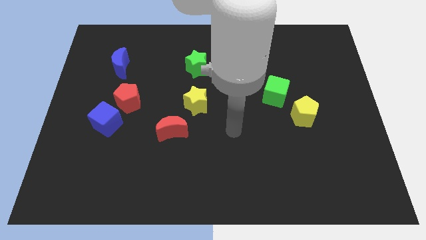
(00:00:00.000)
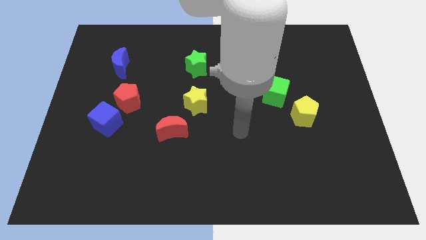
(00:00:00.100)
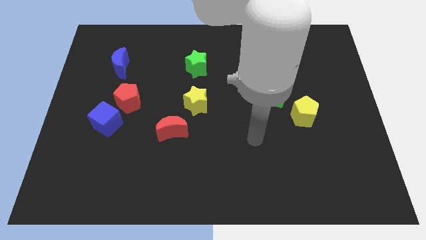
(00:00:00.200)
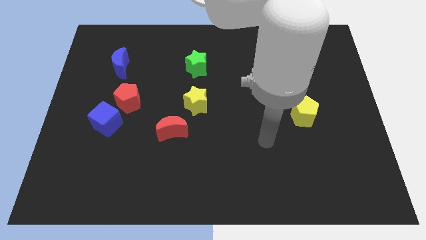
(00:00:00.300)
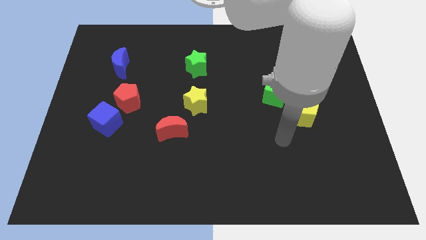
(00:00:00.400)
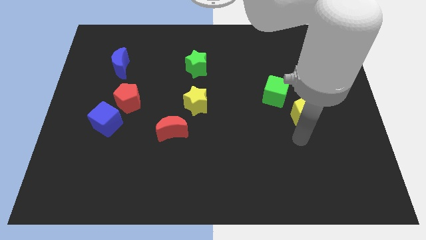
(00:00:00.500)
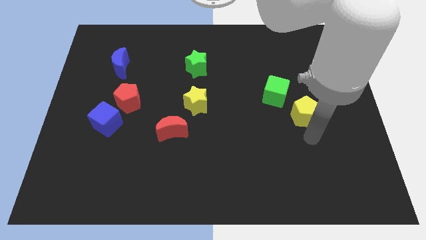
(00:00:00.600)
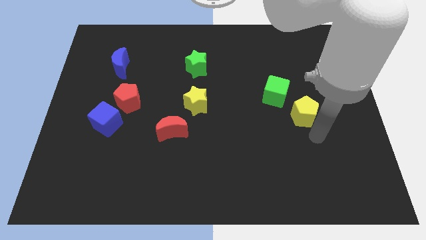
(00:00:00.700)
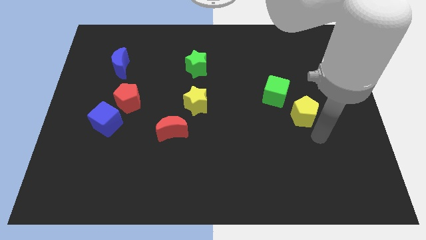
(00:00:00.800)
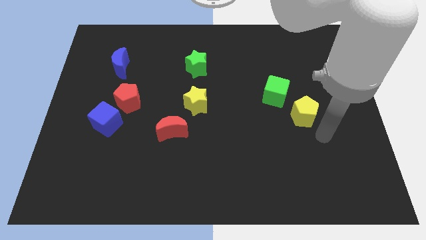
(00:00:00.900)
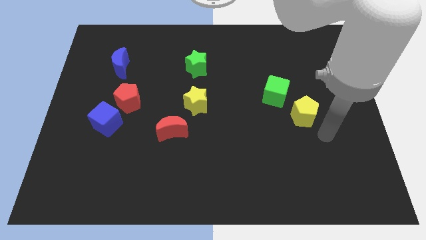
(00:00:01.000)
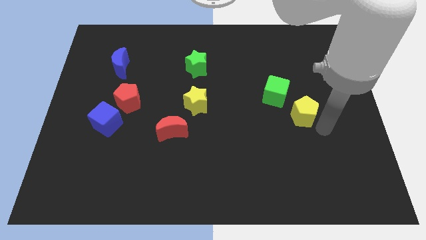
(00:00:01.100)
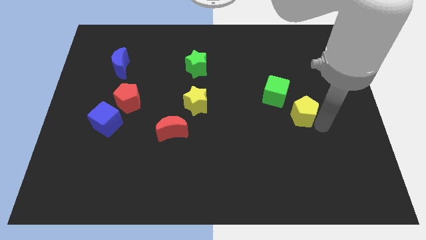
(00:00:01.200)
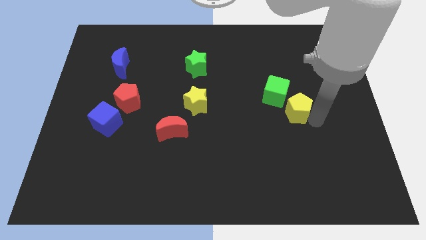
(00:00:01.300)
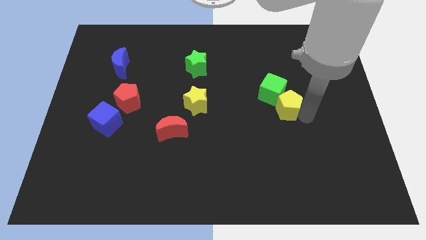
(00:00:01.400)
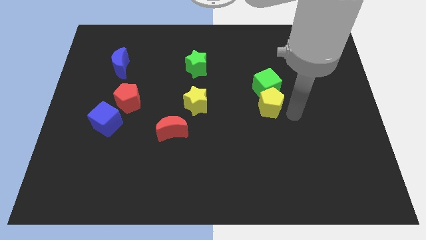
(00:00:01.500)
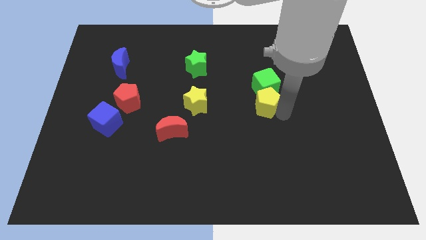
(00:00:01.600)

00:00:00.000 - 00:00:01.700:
push the yellow pentagon into the green cube

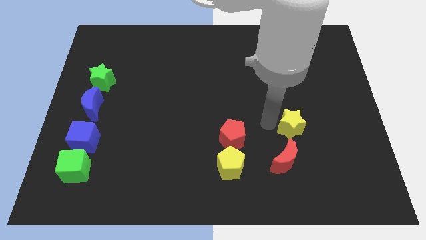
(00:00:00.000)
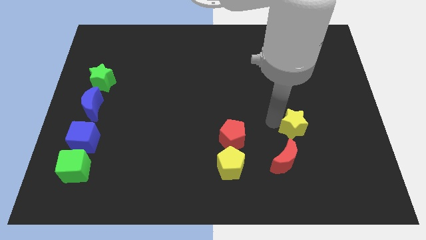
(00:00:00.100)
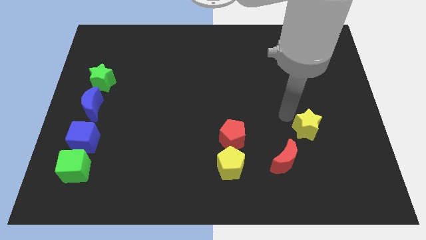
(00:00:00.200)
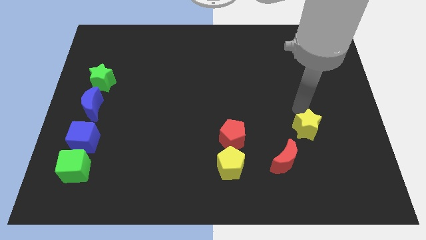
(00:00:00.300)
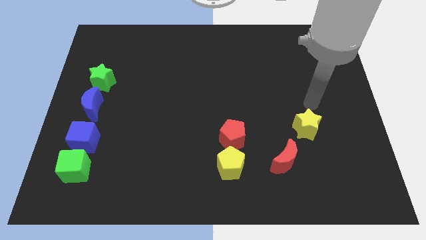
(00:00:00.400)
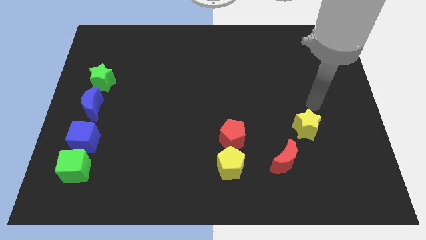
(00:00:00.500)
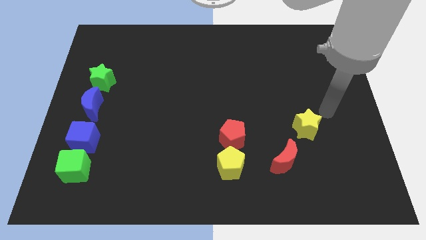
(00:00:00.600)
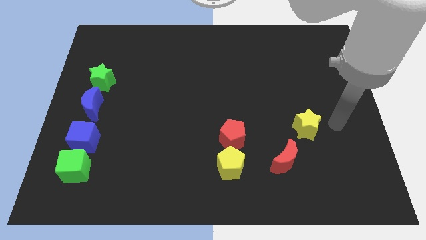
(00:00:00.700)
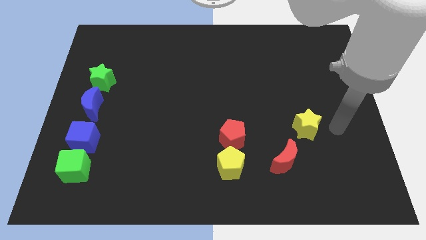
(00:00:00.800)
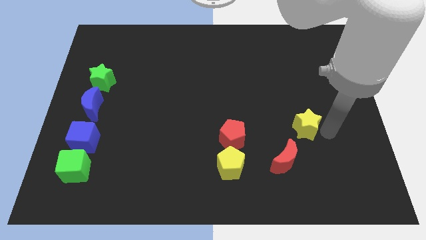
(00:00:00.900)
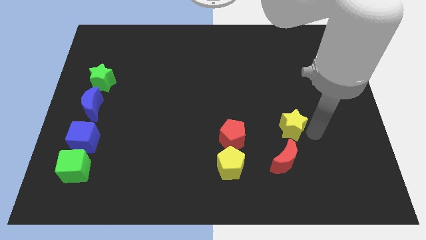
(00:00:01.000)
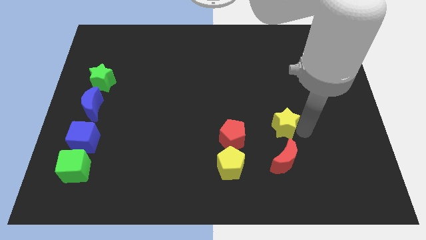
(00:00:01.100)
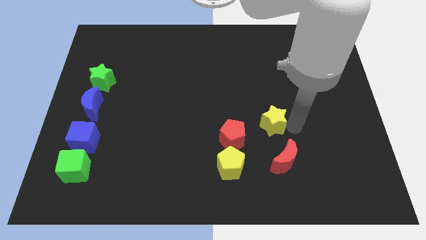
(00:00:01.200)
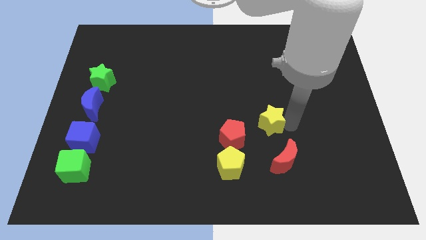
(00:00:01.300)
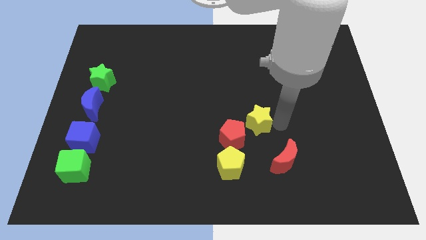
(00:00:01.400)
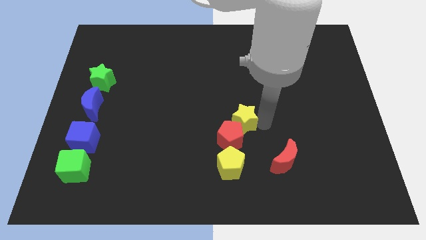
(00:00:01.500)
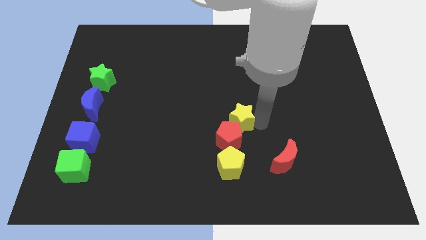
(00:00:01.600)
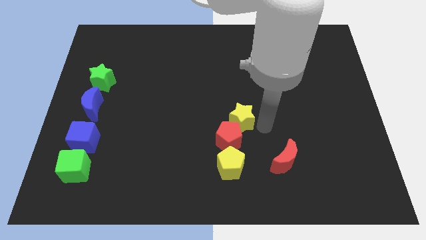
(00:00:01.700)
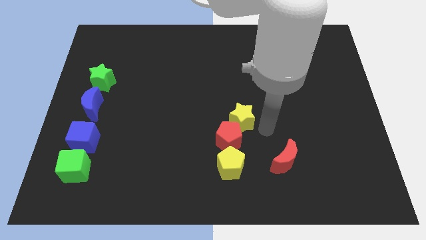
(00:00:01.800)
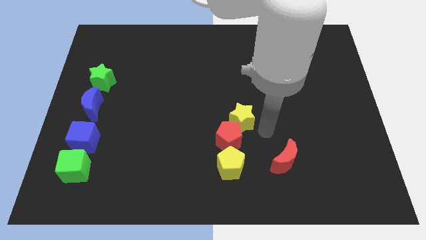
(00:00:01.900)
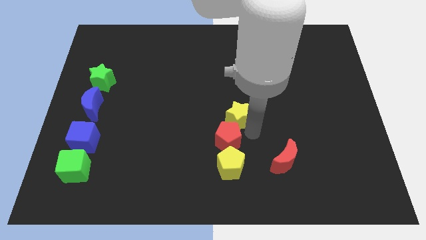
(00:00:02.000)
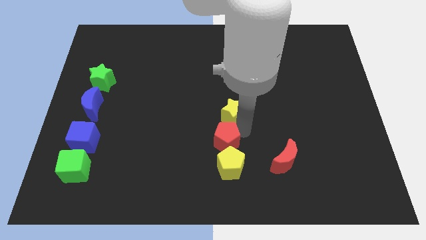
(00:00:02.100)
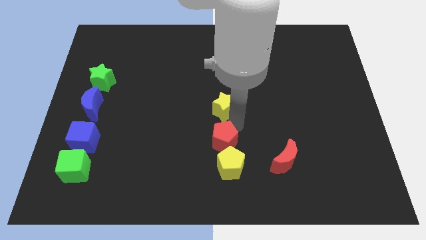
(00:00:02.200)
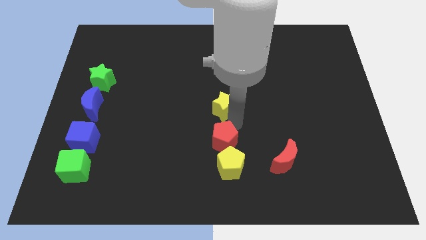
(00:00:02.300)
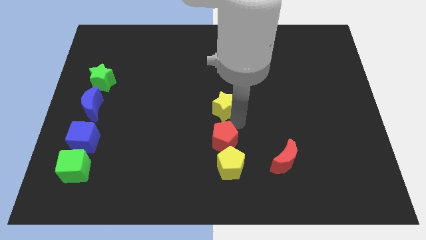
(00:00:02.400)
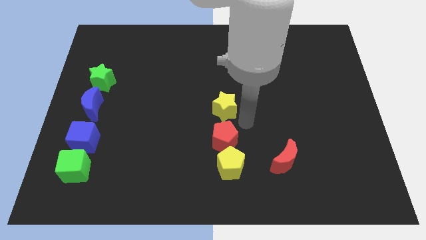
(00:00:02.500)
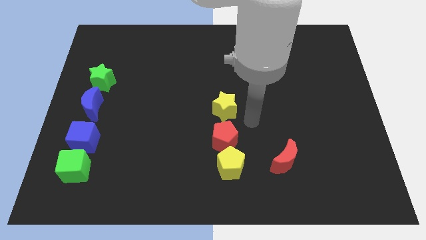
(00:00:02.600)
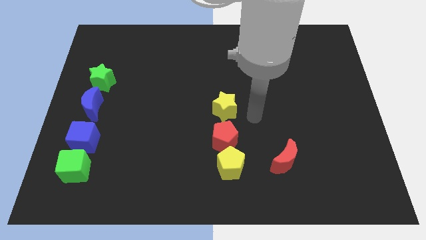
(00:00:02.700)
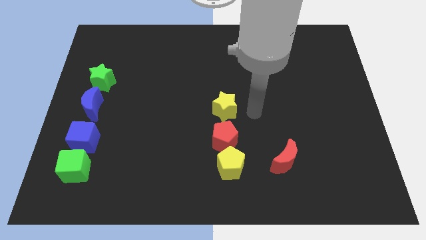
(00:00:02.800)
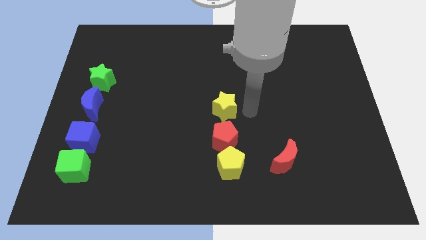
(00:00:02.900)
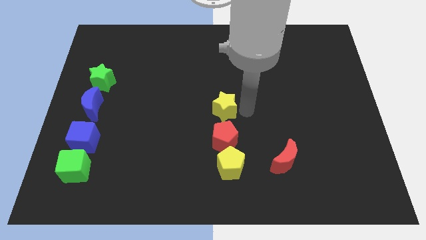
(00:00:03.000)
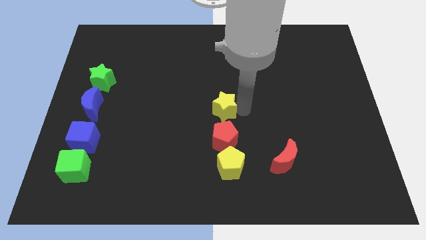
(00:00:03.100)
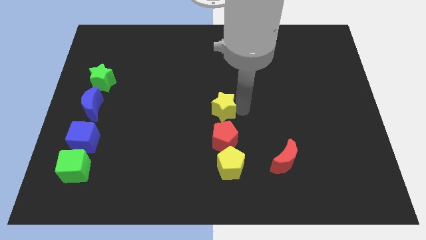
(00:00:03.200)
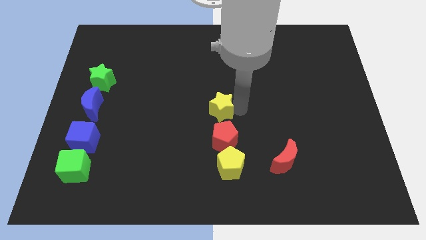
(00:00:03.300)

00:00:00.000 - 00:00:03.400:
push the yellow star vertically above the red pentagon

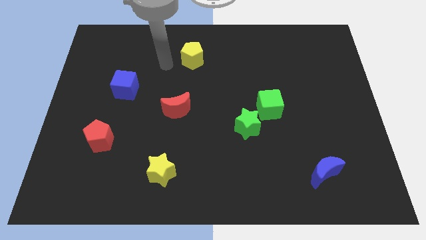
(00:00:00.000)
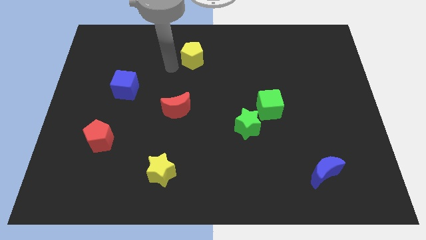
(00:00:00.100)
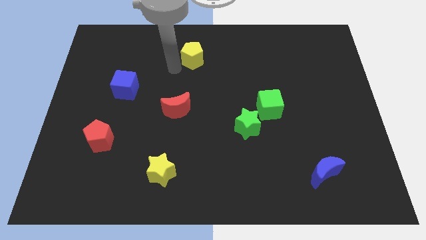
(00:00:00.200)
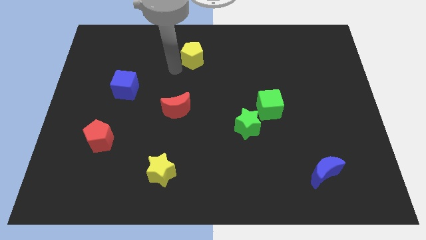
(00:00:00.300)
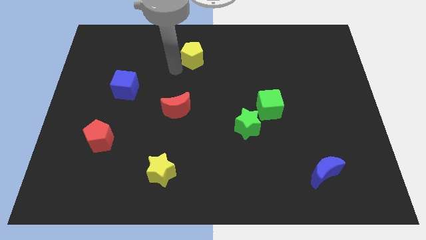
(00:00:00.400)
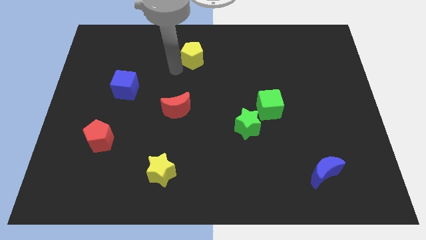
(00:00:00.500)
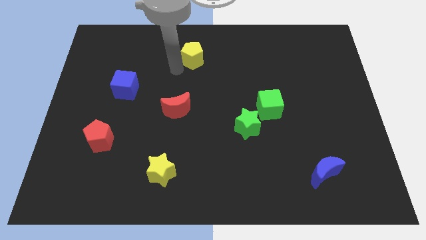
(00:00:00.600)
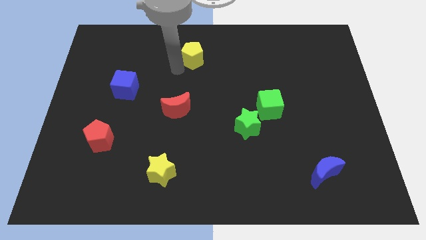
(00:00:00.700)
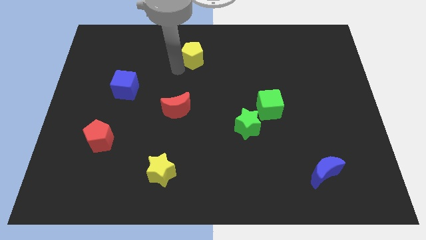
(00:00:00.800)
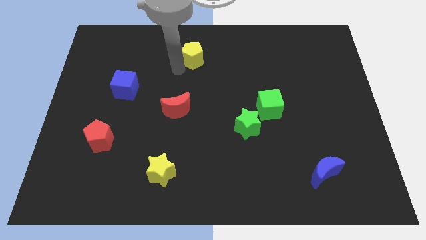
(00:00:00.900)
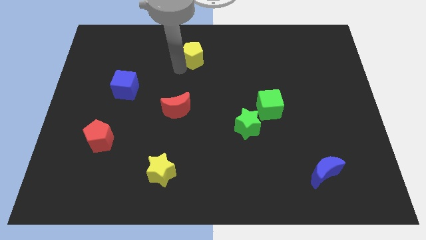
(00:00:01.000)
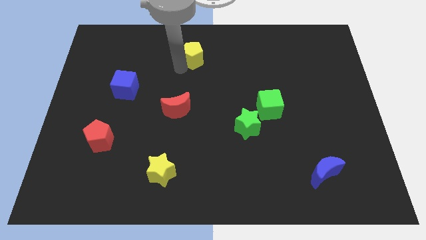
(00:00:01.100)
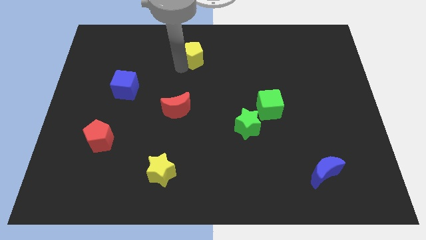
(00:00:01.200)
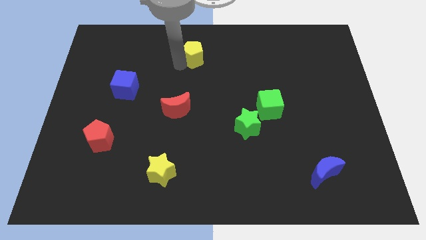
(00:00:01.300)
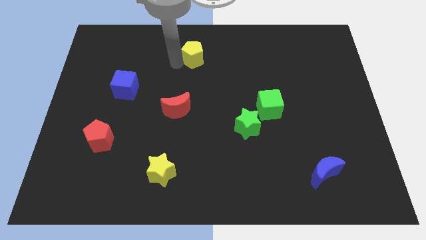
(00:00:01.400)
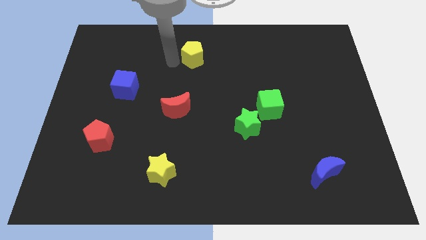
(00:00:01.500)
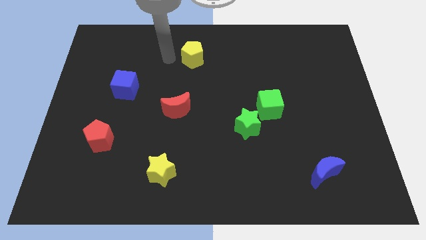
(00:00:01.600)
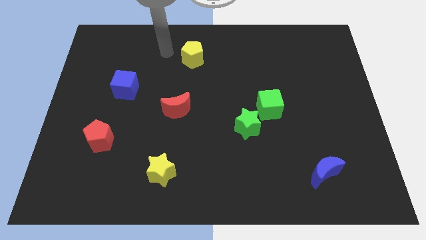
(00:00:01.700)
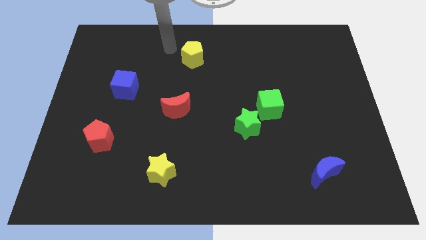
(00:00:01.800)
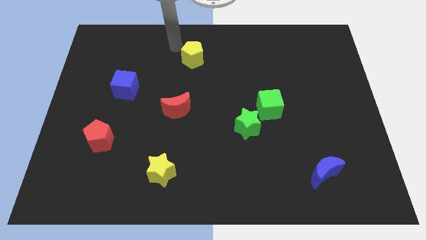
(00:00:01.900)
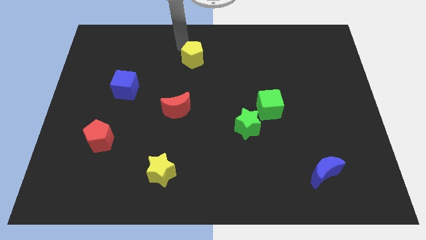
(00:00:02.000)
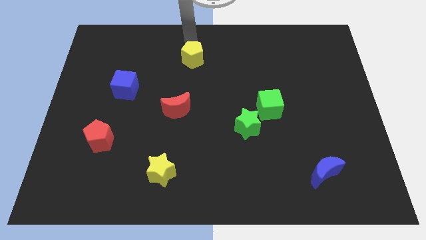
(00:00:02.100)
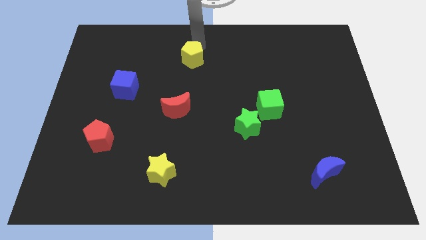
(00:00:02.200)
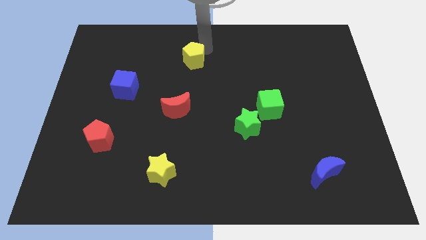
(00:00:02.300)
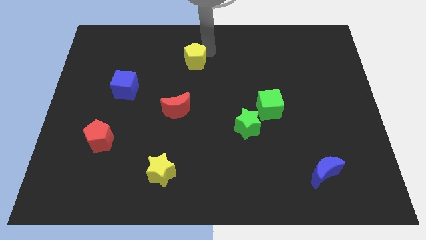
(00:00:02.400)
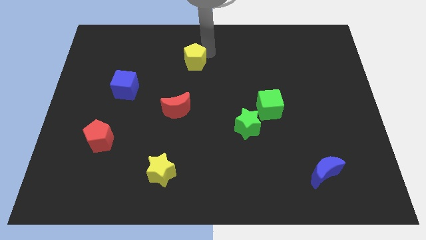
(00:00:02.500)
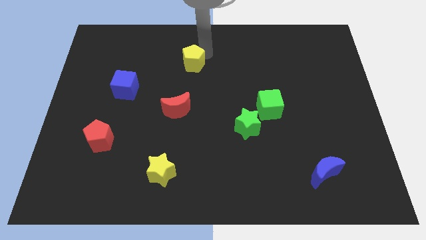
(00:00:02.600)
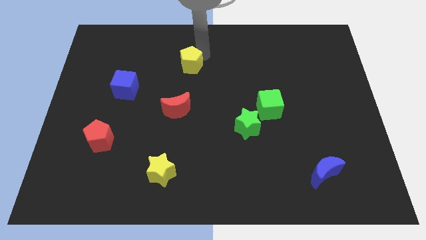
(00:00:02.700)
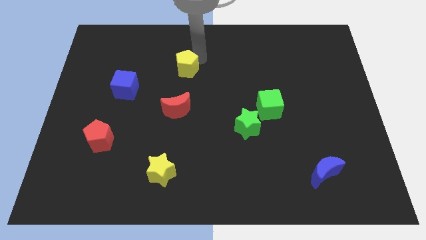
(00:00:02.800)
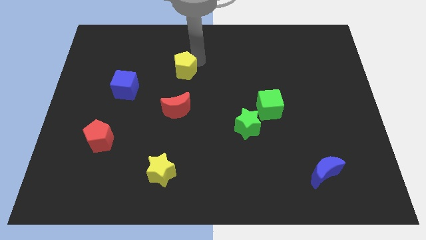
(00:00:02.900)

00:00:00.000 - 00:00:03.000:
push the yellow pentagon above the red moon

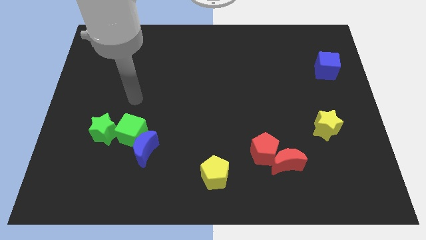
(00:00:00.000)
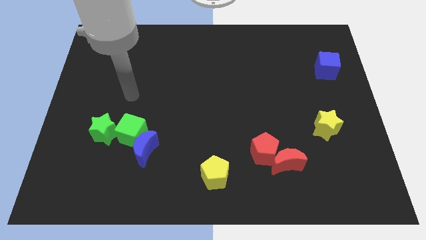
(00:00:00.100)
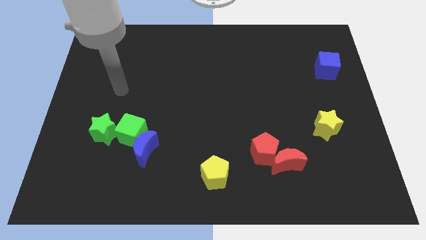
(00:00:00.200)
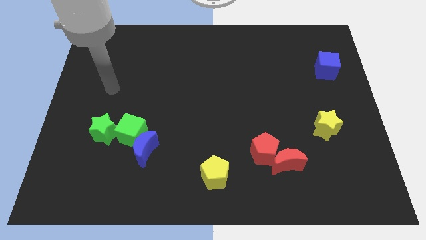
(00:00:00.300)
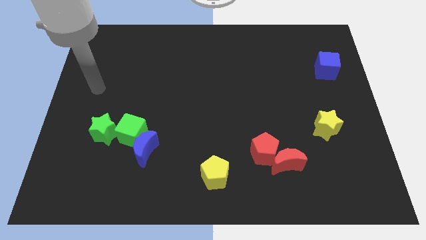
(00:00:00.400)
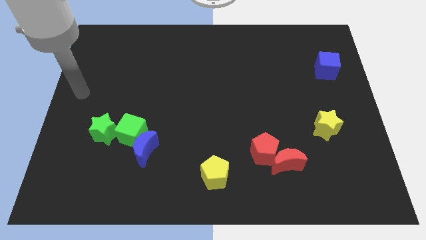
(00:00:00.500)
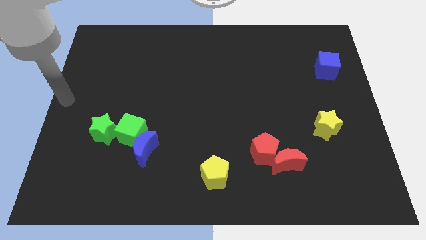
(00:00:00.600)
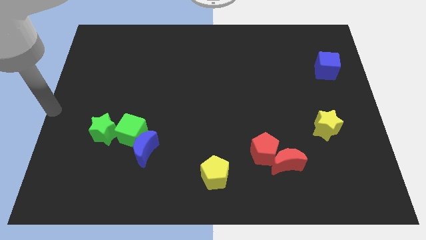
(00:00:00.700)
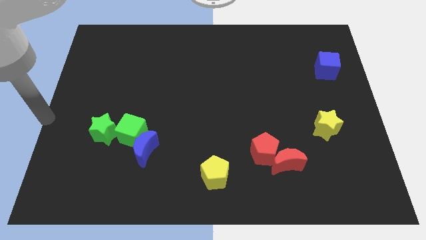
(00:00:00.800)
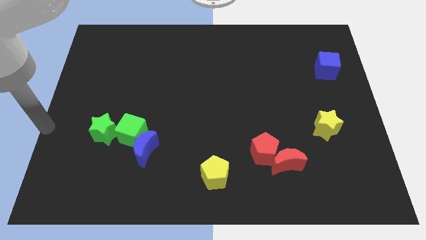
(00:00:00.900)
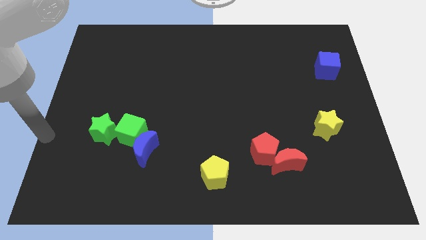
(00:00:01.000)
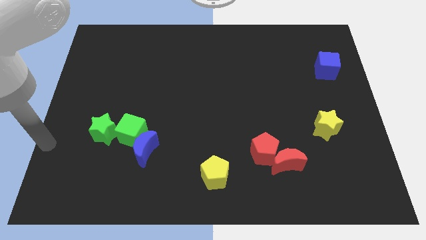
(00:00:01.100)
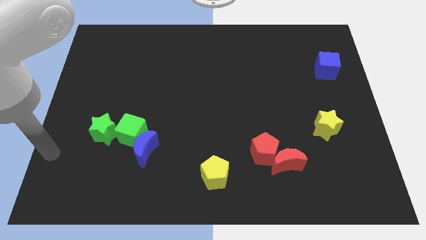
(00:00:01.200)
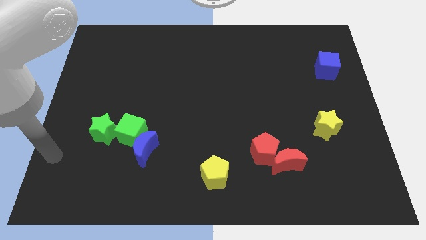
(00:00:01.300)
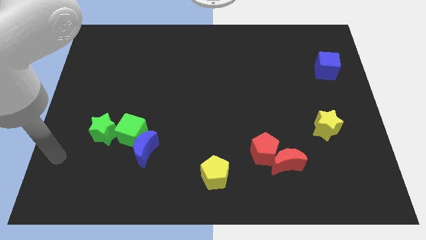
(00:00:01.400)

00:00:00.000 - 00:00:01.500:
move your hand to the left side of the board
